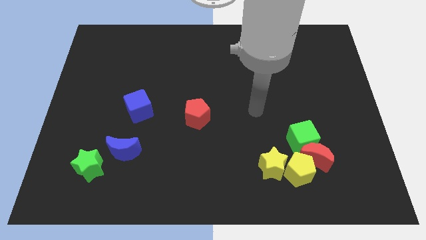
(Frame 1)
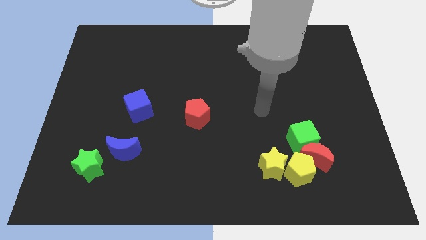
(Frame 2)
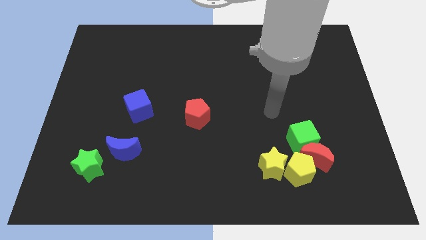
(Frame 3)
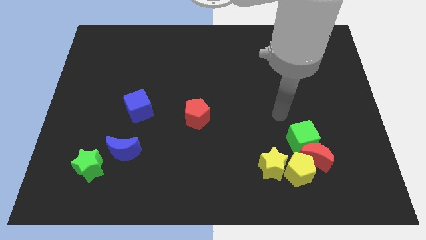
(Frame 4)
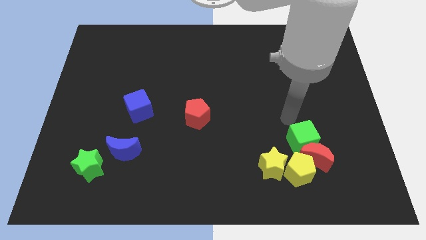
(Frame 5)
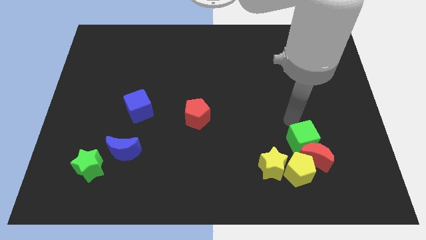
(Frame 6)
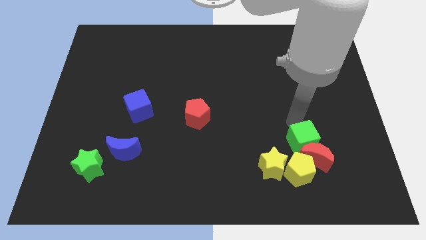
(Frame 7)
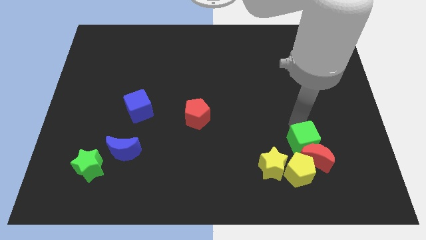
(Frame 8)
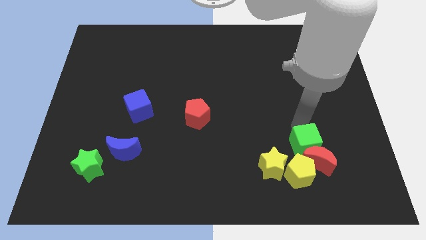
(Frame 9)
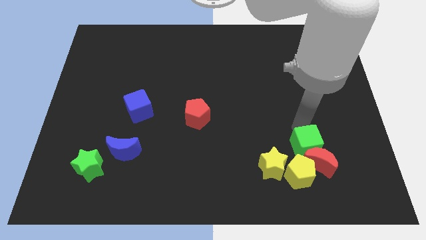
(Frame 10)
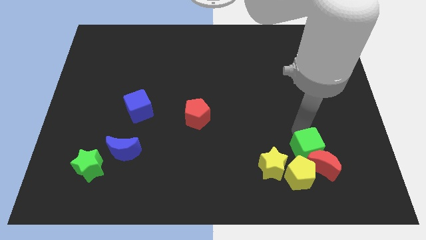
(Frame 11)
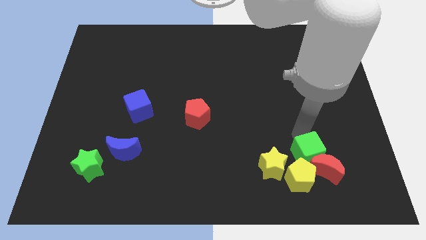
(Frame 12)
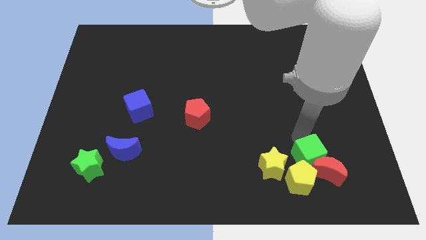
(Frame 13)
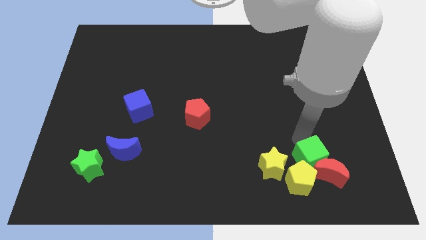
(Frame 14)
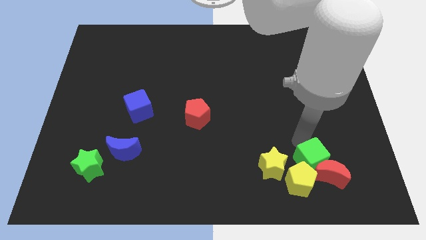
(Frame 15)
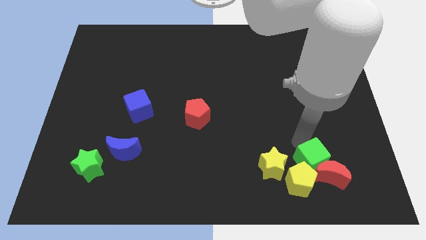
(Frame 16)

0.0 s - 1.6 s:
push the green cube next to the yellow pentagon

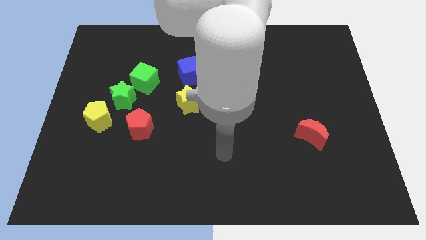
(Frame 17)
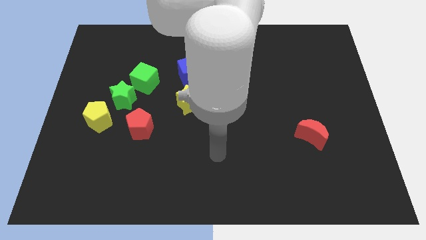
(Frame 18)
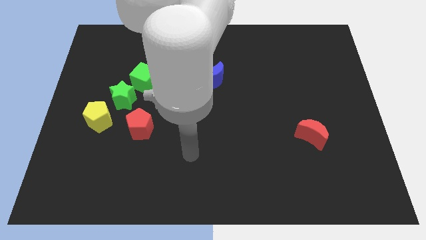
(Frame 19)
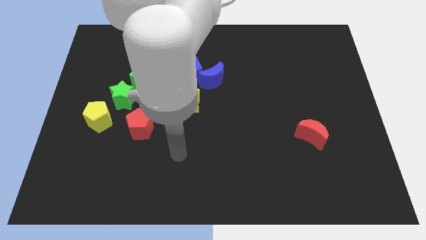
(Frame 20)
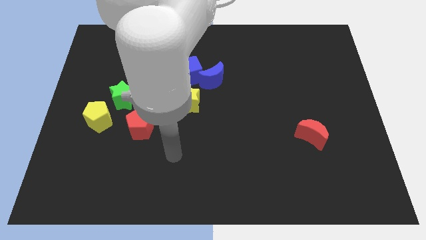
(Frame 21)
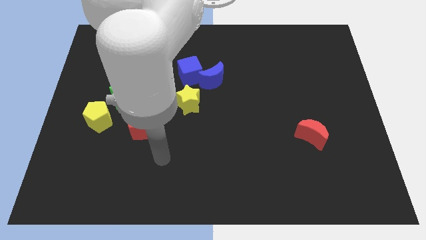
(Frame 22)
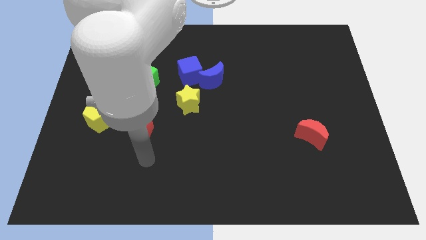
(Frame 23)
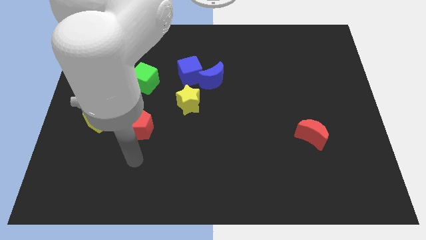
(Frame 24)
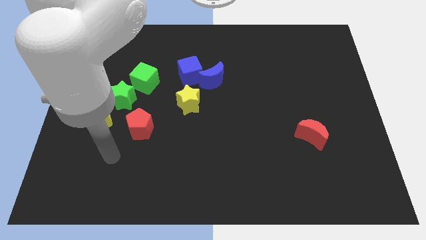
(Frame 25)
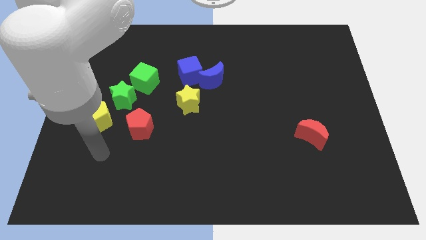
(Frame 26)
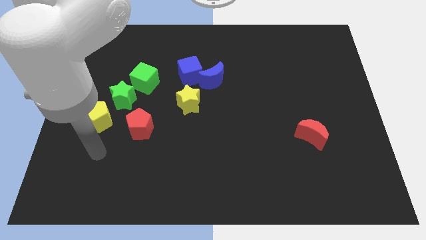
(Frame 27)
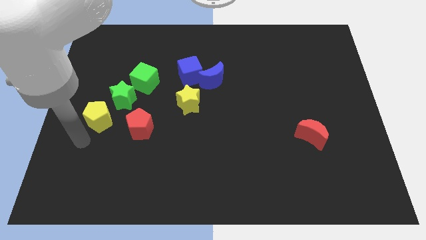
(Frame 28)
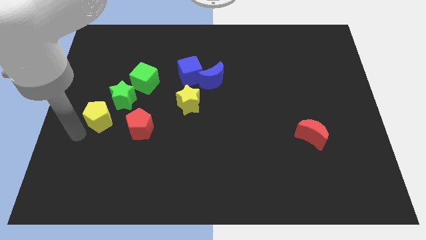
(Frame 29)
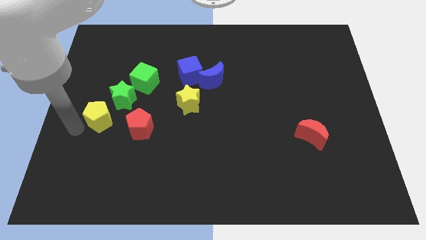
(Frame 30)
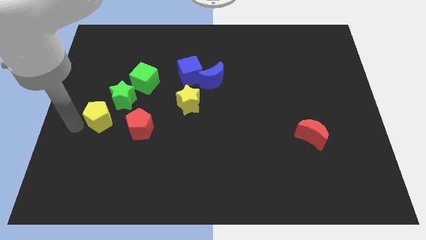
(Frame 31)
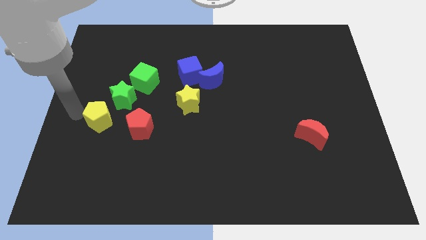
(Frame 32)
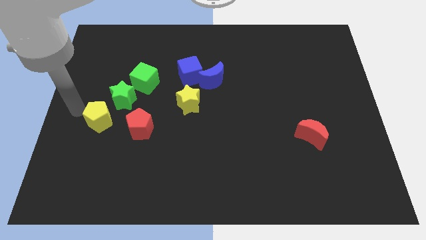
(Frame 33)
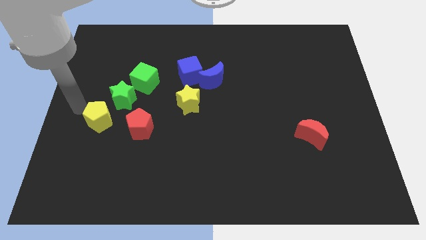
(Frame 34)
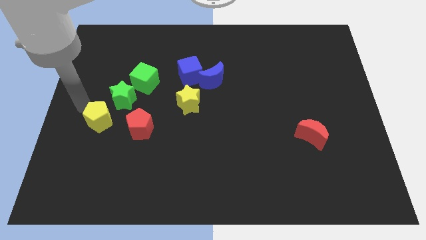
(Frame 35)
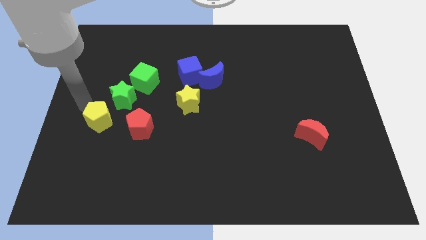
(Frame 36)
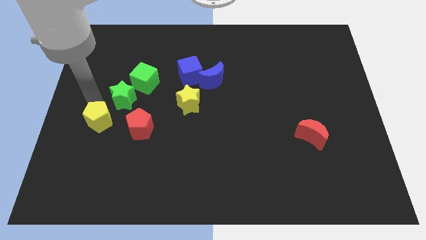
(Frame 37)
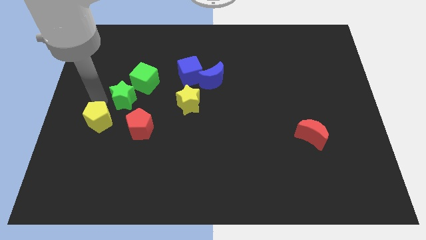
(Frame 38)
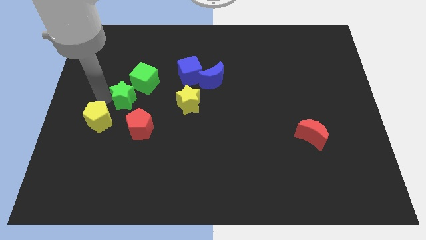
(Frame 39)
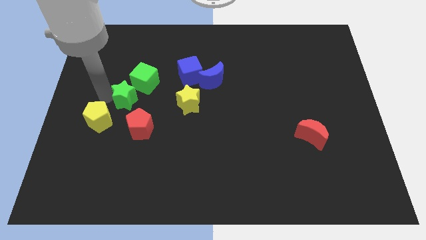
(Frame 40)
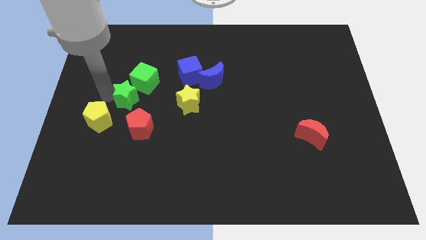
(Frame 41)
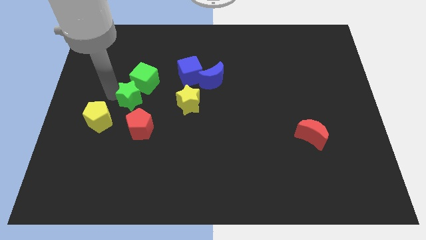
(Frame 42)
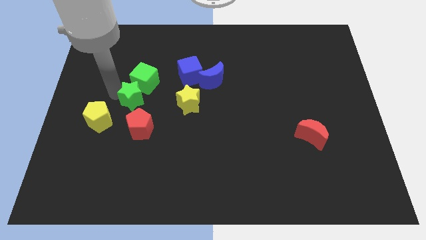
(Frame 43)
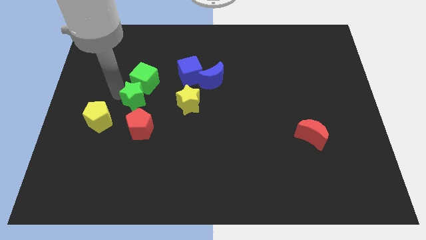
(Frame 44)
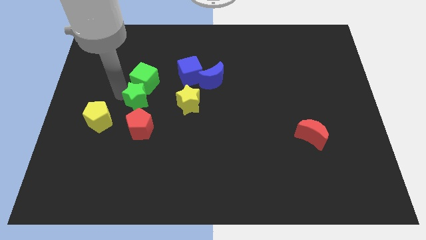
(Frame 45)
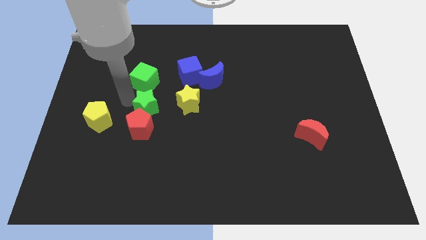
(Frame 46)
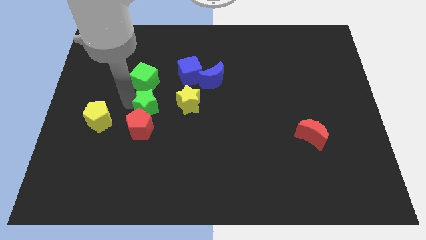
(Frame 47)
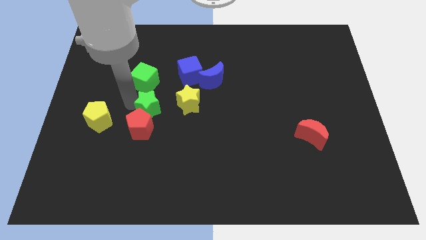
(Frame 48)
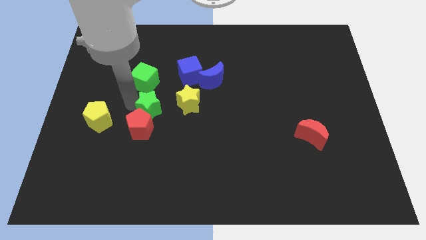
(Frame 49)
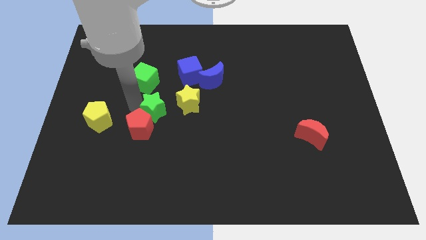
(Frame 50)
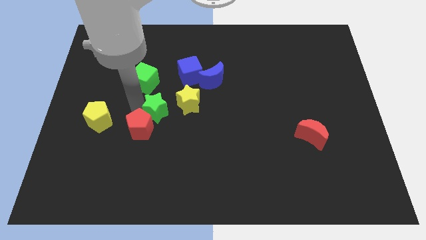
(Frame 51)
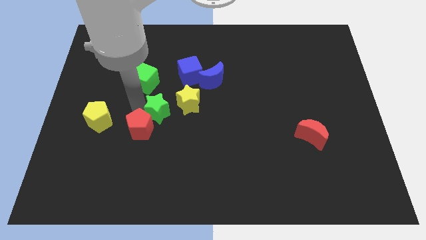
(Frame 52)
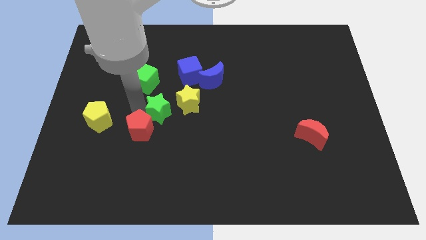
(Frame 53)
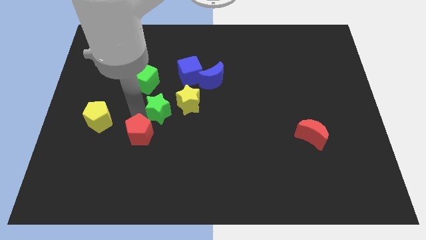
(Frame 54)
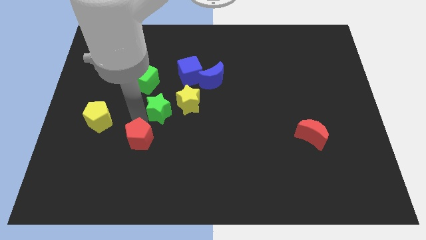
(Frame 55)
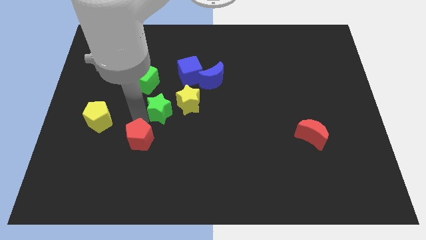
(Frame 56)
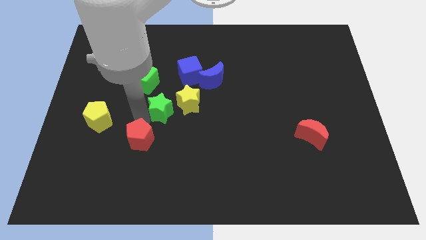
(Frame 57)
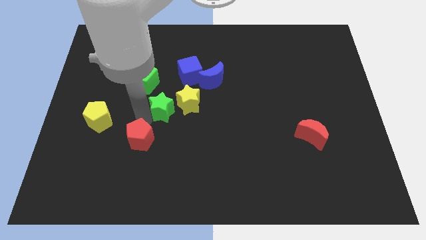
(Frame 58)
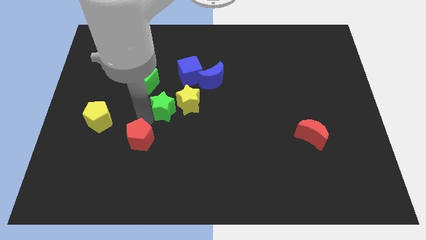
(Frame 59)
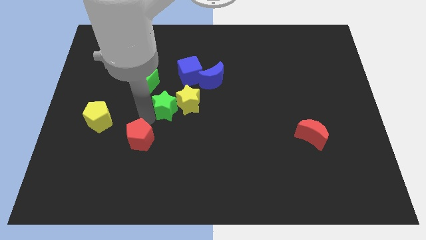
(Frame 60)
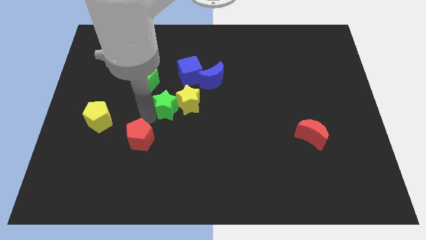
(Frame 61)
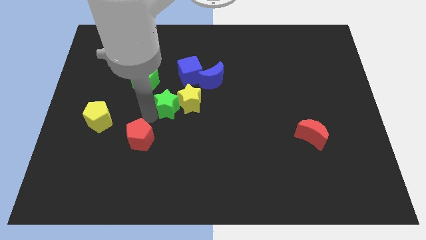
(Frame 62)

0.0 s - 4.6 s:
put the green star towards the yellow star

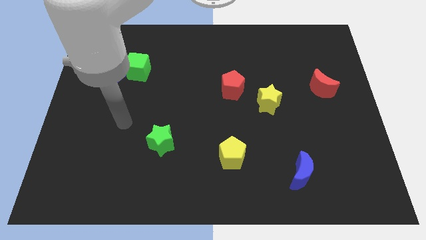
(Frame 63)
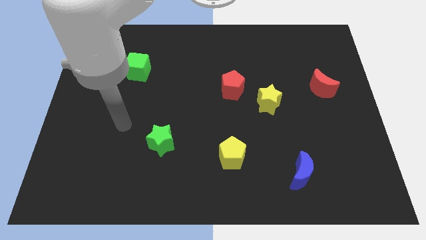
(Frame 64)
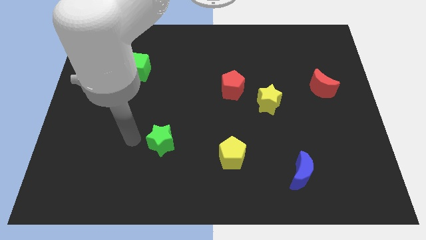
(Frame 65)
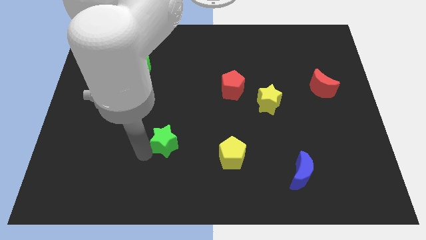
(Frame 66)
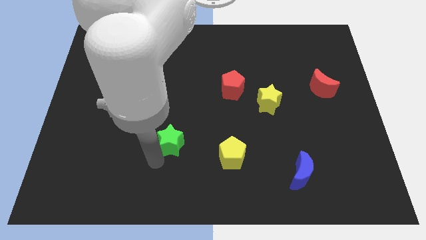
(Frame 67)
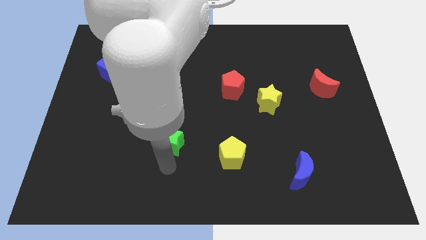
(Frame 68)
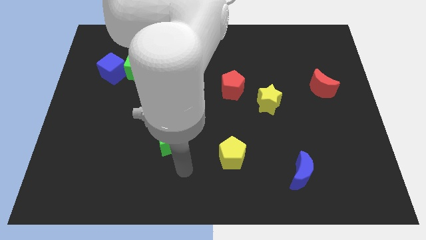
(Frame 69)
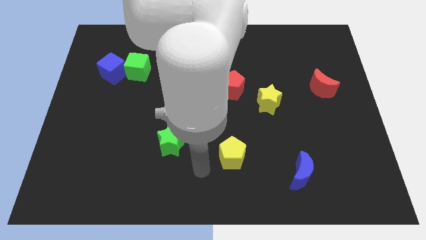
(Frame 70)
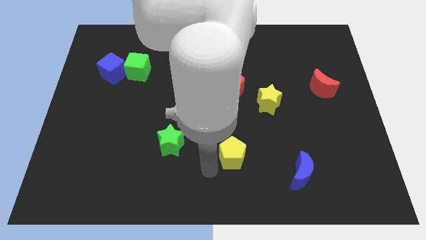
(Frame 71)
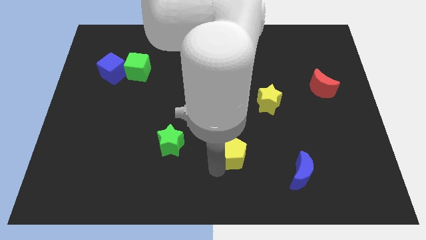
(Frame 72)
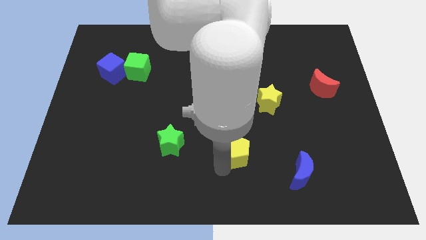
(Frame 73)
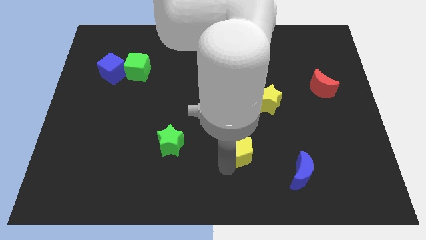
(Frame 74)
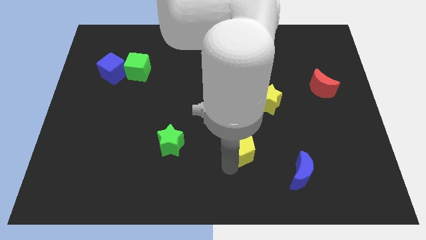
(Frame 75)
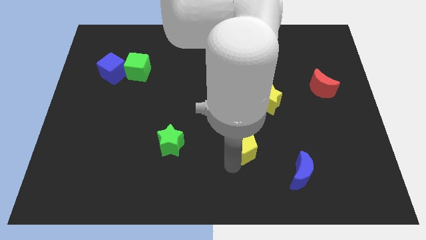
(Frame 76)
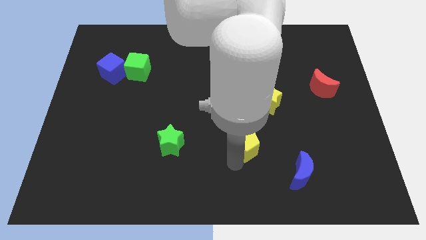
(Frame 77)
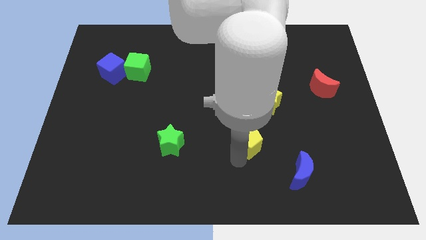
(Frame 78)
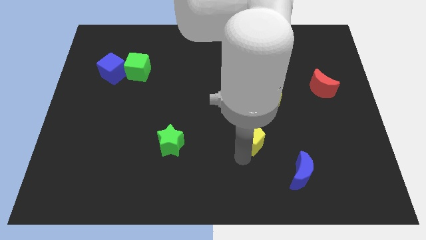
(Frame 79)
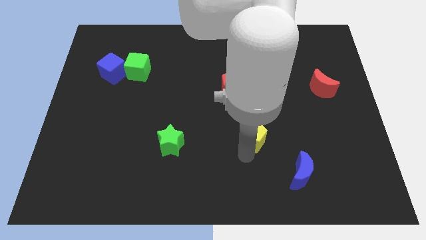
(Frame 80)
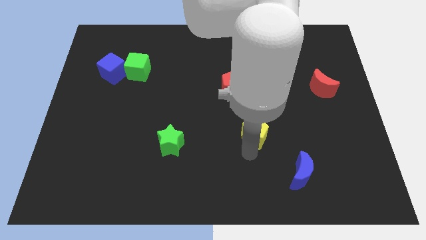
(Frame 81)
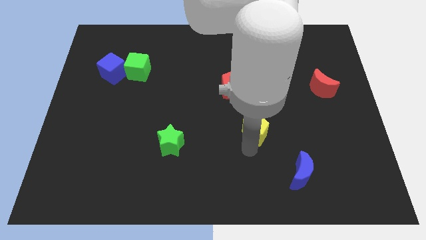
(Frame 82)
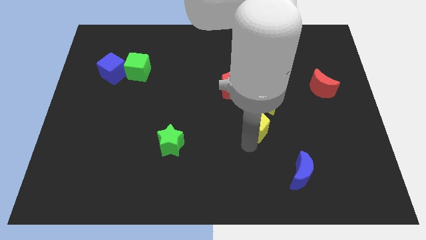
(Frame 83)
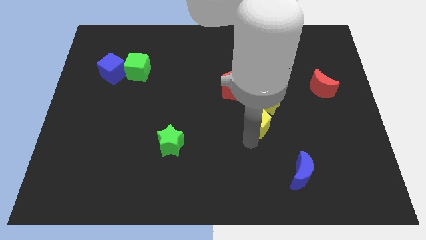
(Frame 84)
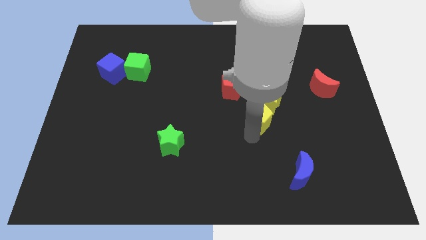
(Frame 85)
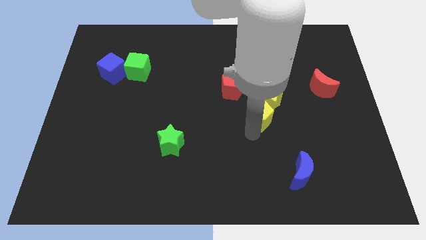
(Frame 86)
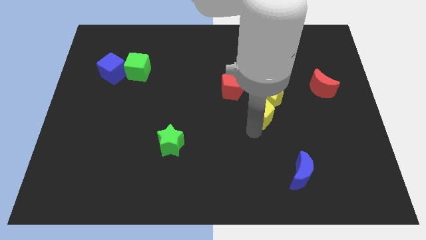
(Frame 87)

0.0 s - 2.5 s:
move the yellow pentagon towards the yellow star
